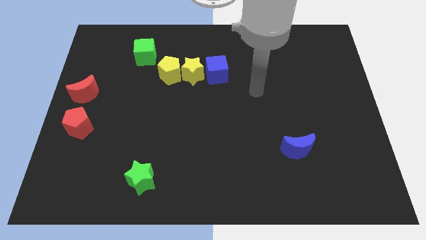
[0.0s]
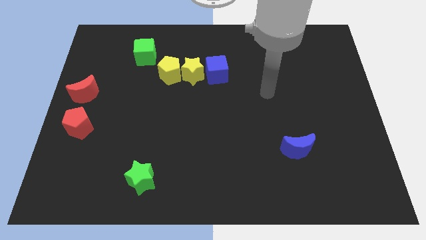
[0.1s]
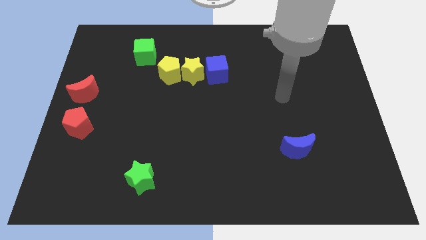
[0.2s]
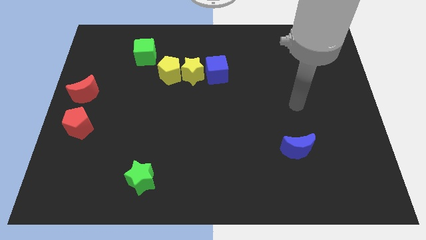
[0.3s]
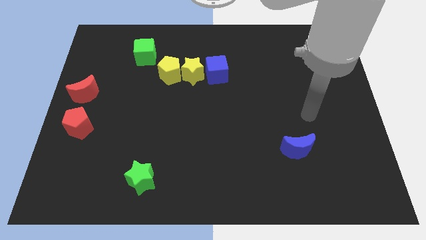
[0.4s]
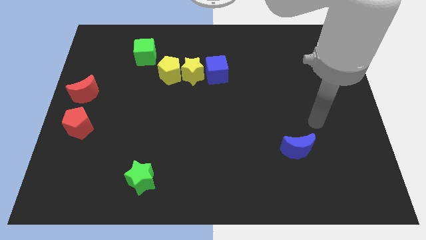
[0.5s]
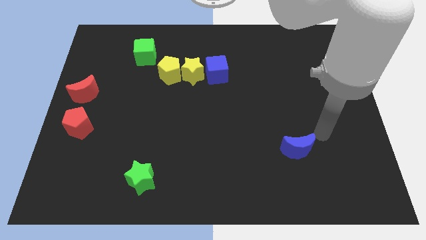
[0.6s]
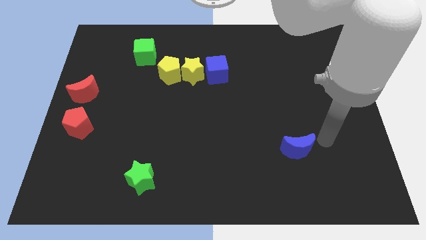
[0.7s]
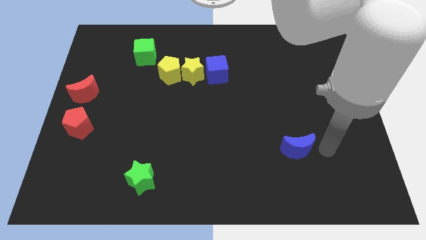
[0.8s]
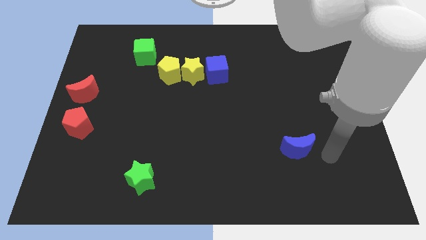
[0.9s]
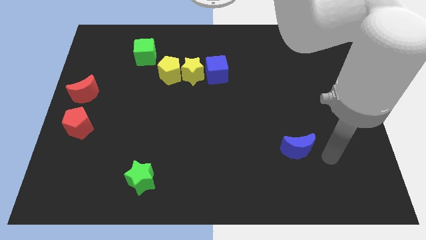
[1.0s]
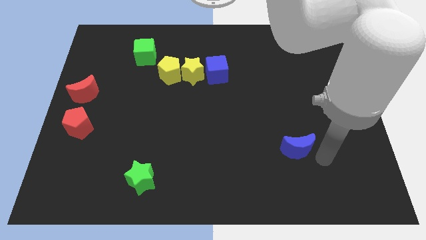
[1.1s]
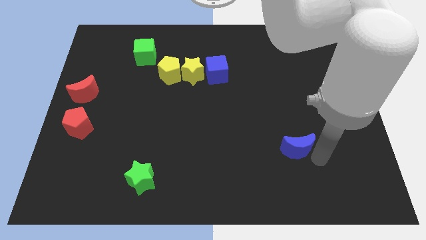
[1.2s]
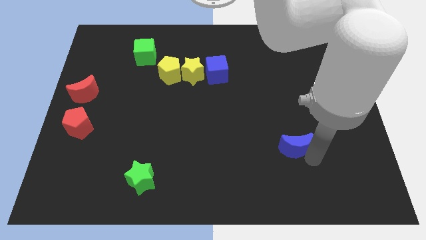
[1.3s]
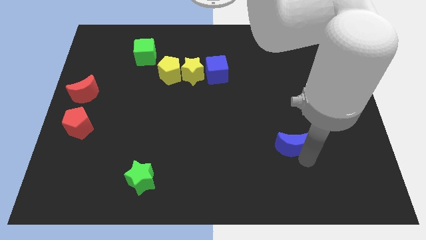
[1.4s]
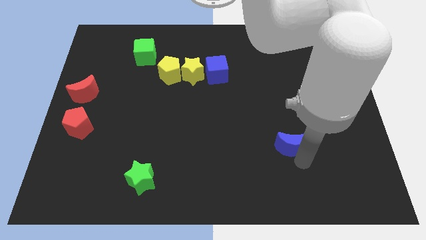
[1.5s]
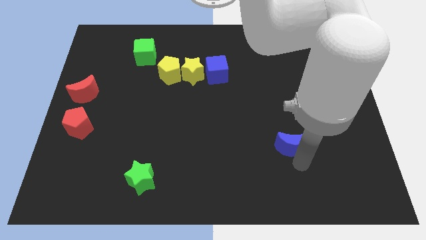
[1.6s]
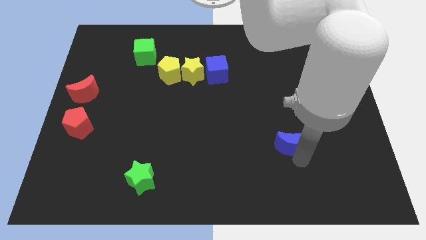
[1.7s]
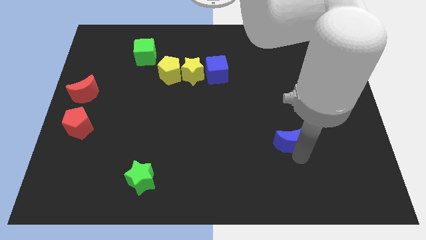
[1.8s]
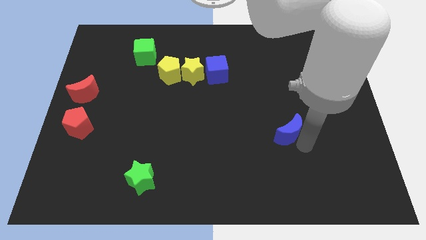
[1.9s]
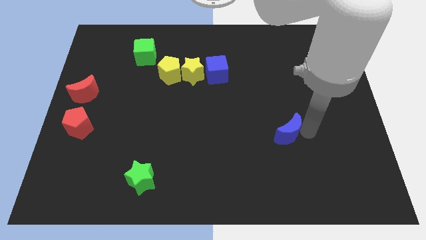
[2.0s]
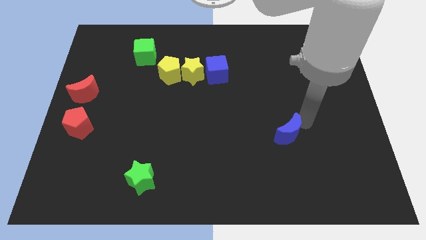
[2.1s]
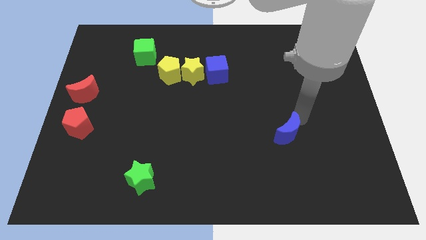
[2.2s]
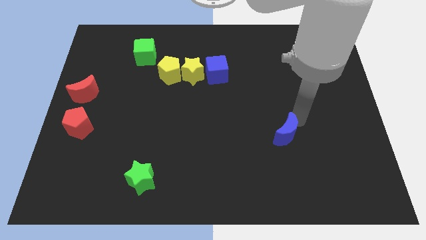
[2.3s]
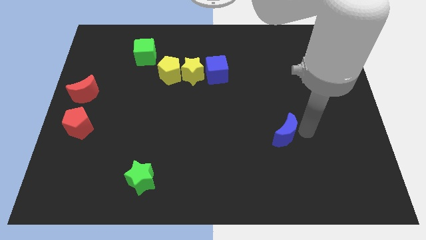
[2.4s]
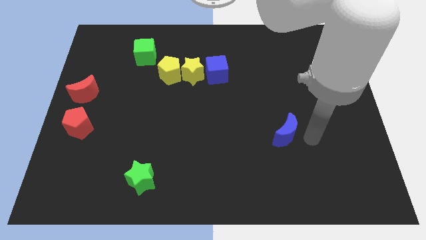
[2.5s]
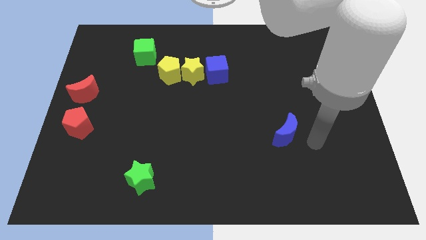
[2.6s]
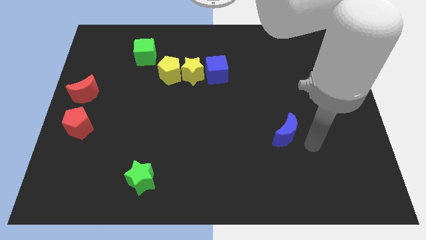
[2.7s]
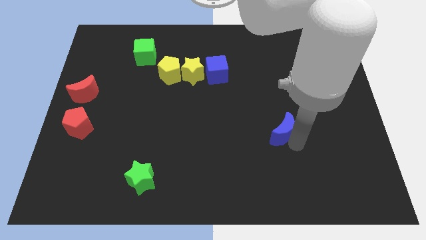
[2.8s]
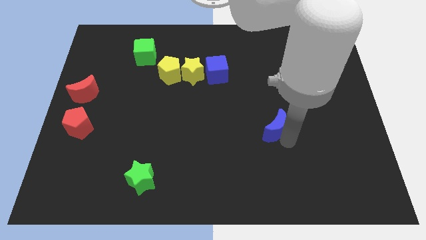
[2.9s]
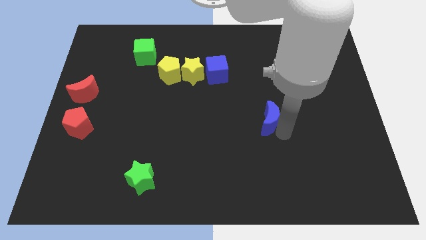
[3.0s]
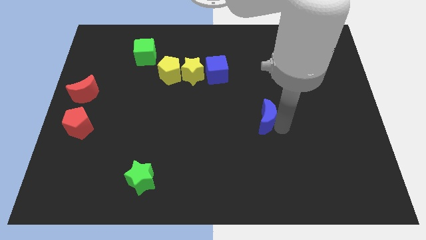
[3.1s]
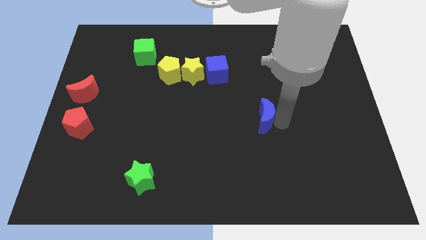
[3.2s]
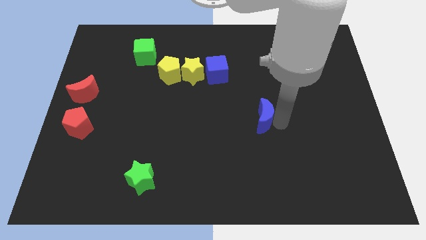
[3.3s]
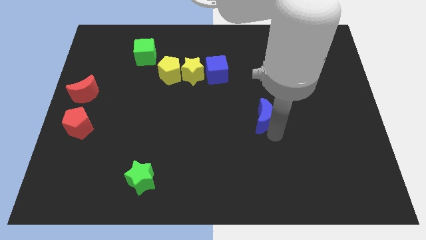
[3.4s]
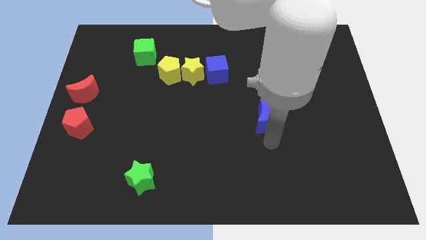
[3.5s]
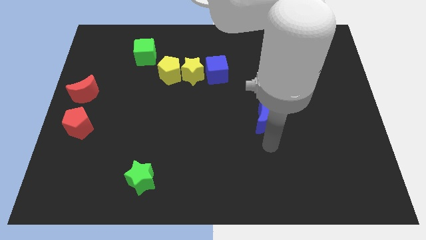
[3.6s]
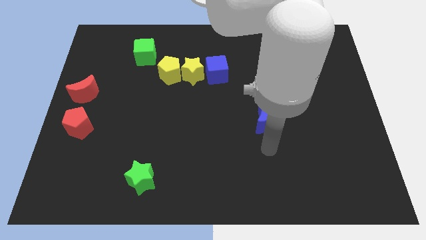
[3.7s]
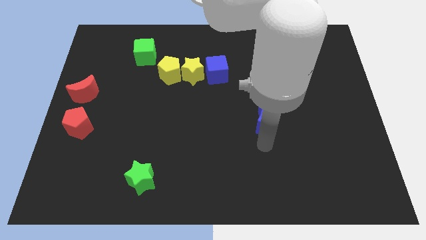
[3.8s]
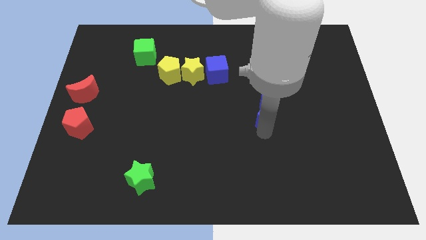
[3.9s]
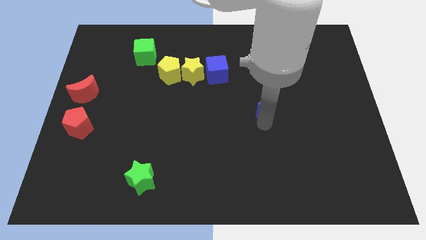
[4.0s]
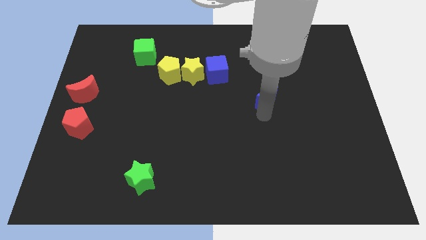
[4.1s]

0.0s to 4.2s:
drag the blue moon towards the blue cube

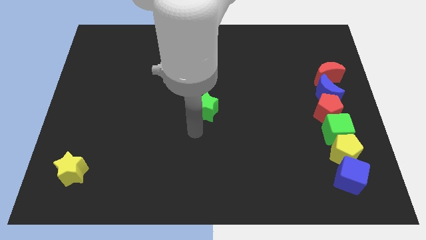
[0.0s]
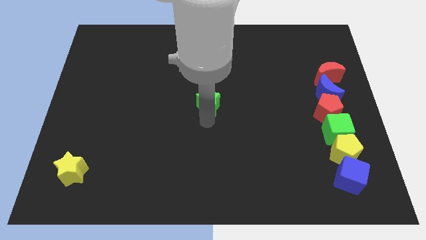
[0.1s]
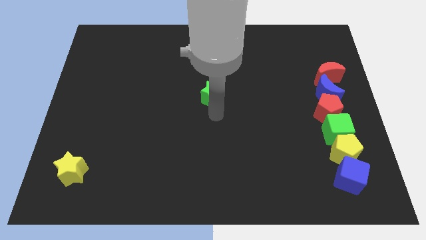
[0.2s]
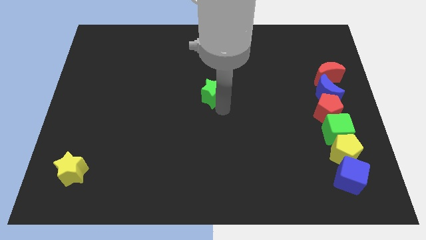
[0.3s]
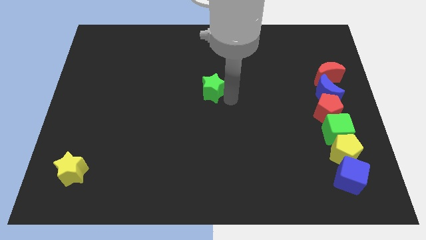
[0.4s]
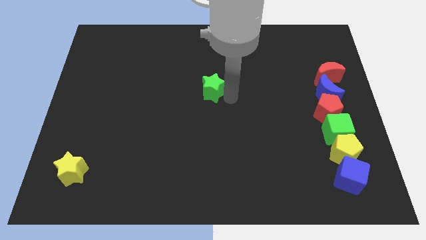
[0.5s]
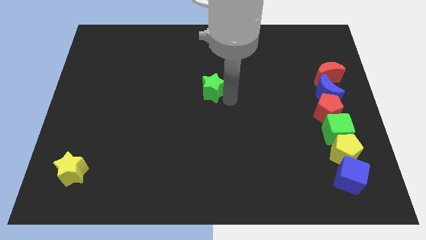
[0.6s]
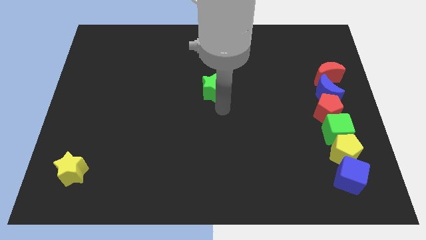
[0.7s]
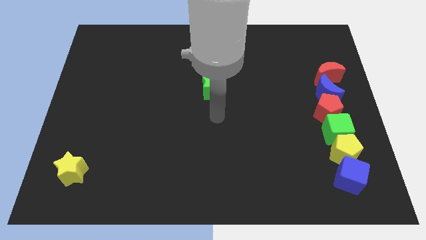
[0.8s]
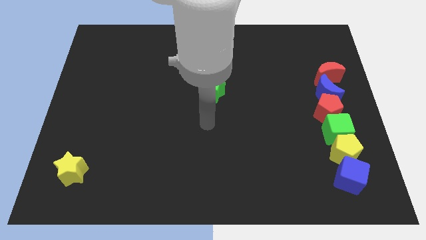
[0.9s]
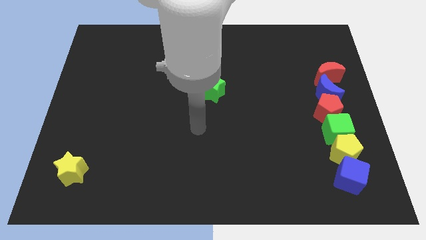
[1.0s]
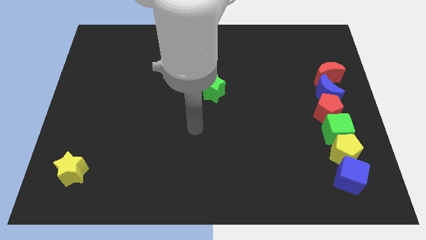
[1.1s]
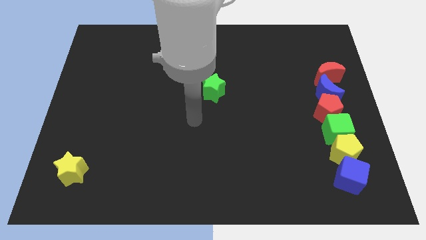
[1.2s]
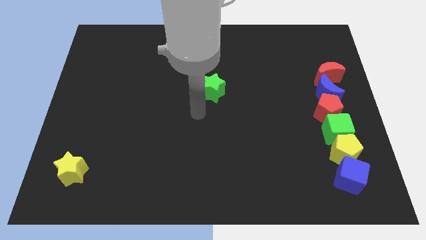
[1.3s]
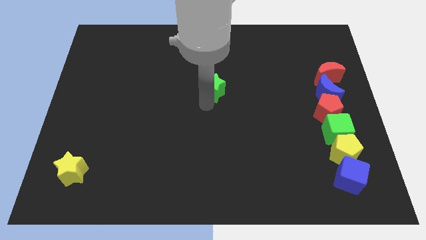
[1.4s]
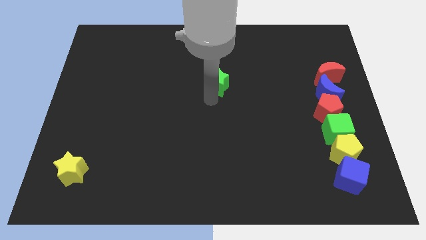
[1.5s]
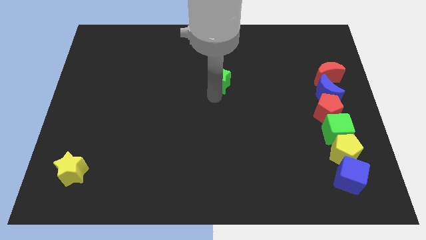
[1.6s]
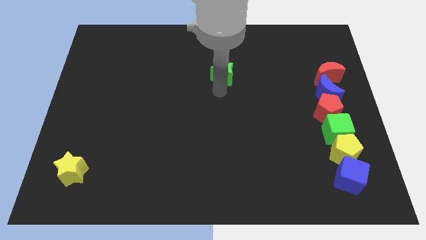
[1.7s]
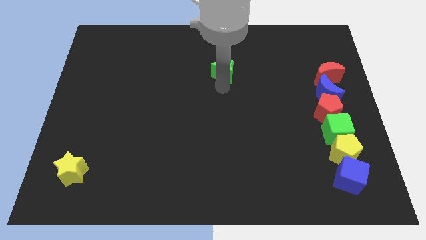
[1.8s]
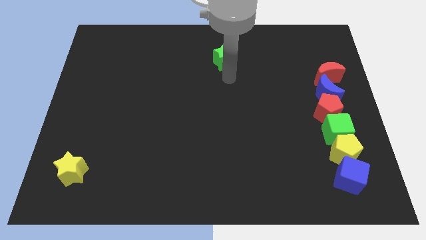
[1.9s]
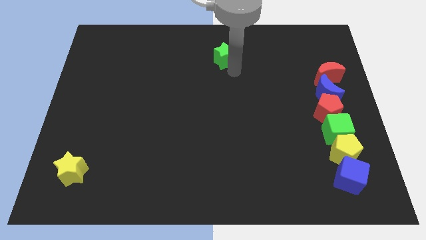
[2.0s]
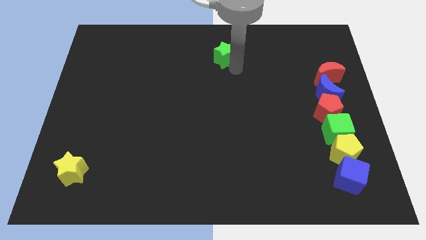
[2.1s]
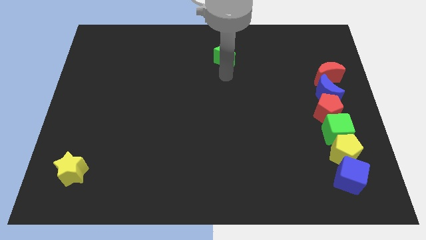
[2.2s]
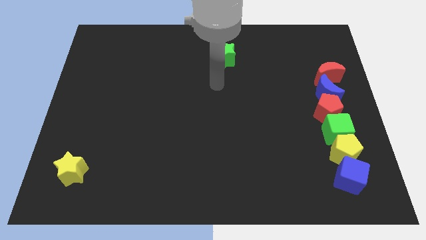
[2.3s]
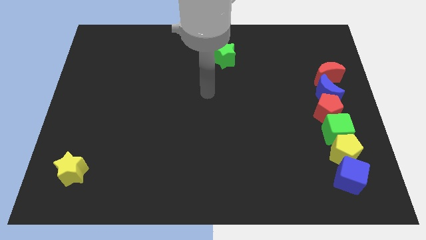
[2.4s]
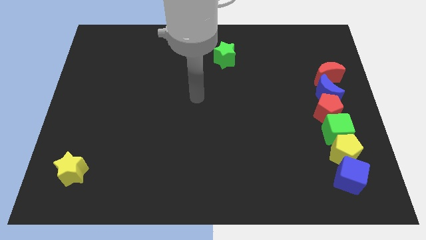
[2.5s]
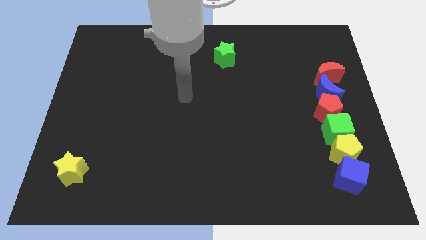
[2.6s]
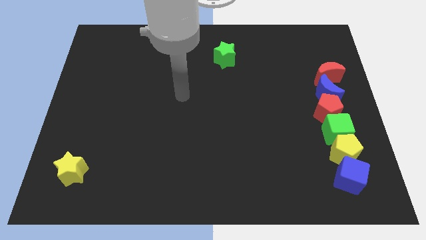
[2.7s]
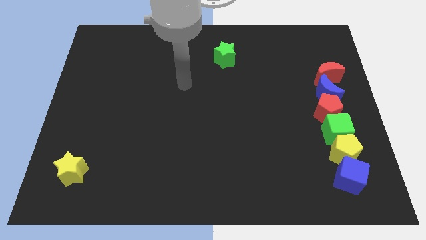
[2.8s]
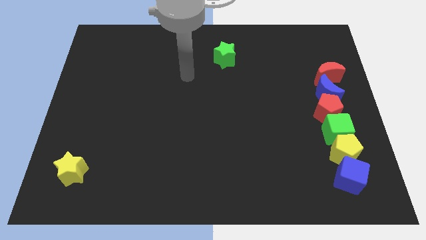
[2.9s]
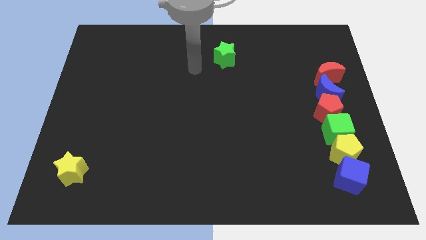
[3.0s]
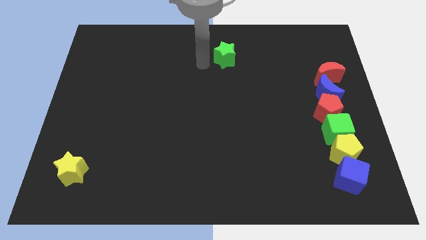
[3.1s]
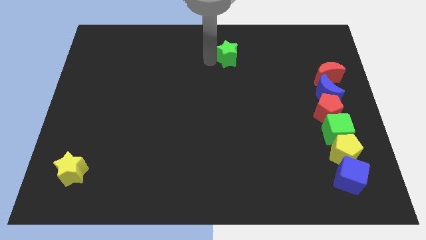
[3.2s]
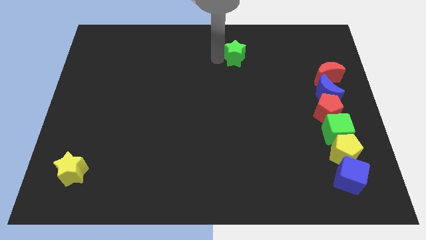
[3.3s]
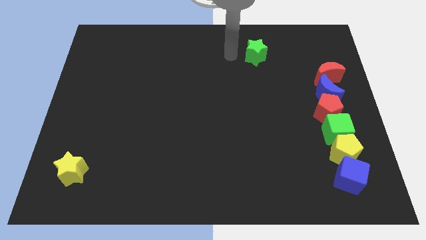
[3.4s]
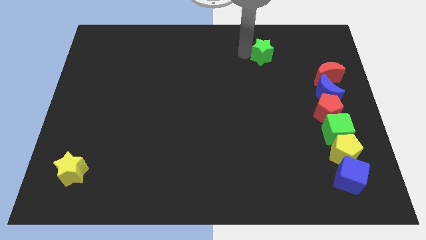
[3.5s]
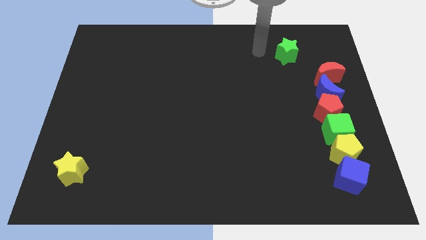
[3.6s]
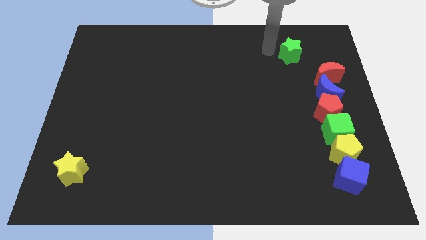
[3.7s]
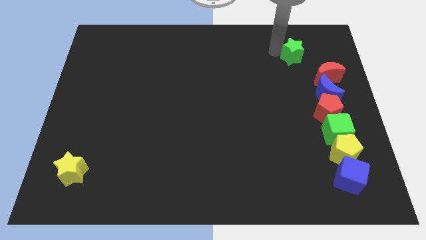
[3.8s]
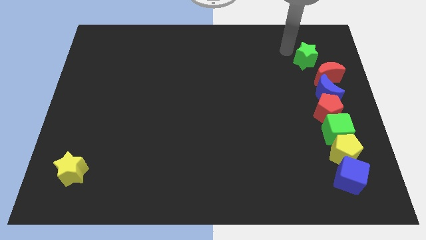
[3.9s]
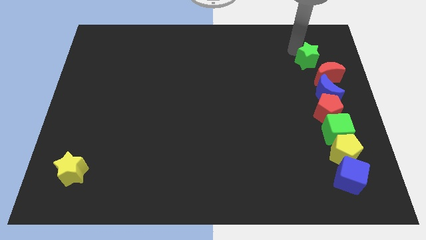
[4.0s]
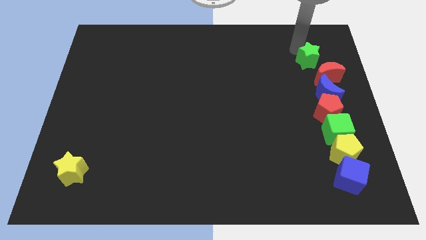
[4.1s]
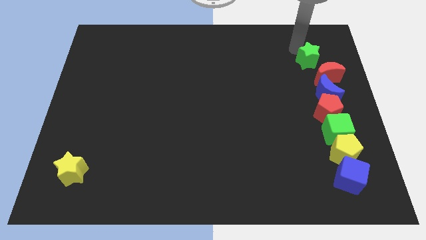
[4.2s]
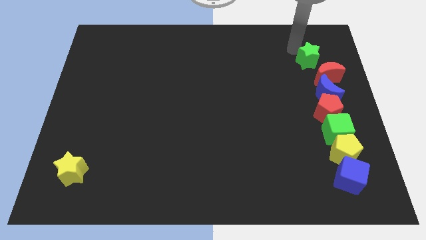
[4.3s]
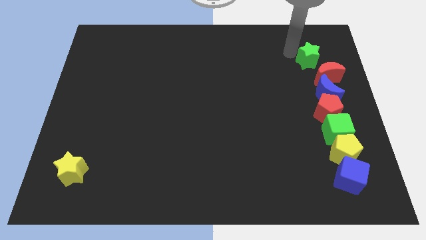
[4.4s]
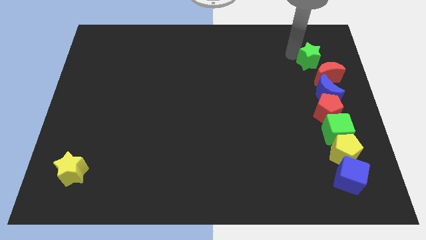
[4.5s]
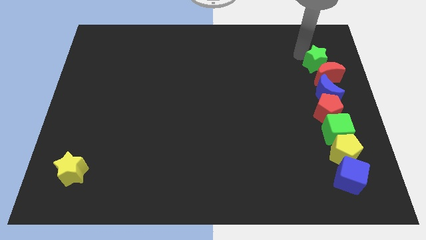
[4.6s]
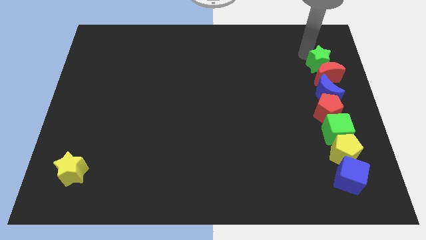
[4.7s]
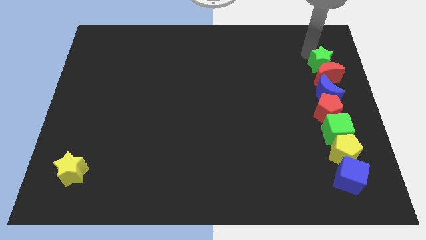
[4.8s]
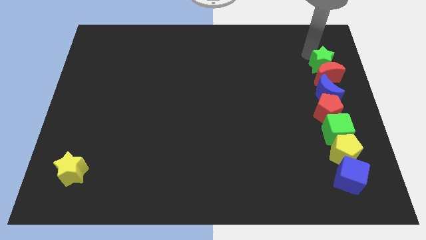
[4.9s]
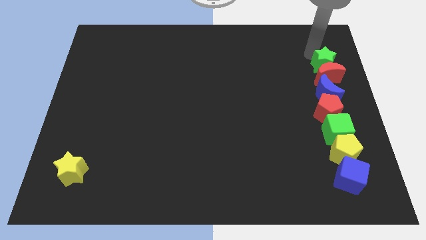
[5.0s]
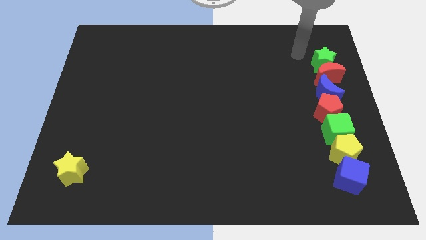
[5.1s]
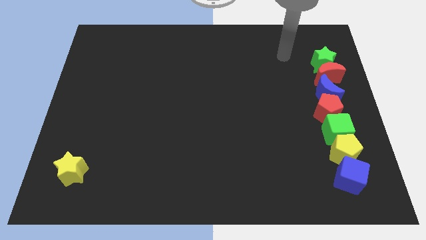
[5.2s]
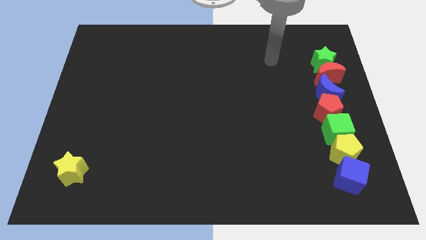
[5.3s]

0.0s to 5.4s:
move green star above red moon
